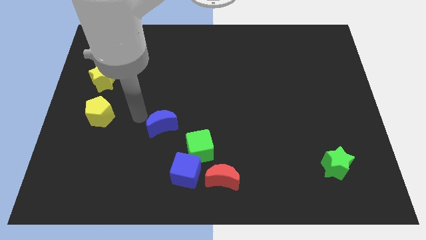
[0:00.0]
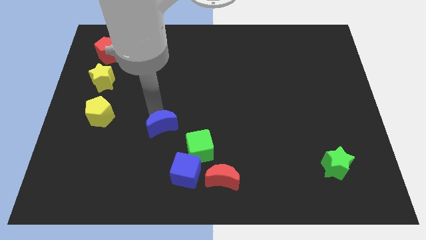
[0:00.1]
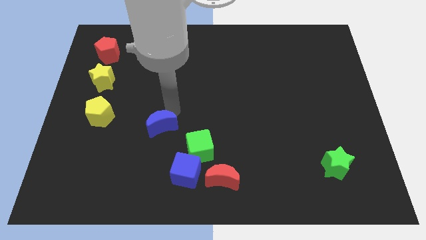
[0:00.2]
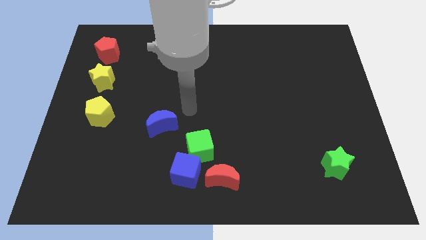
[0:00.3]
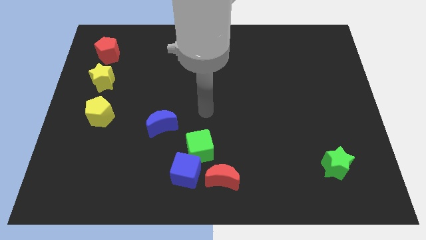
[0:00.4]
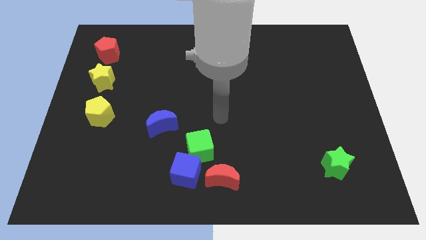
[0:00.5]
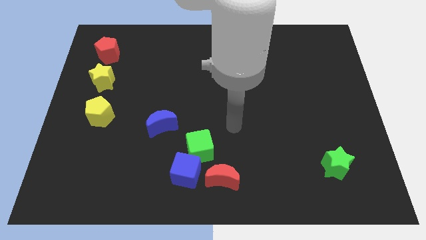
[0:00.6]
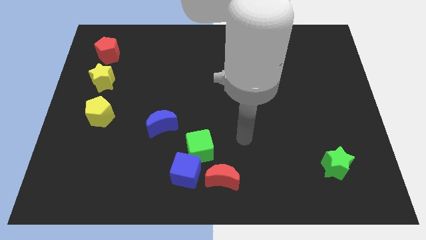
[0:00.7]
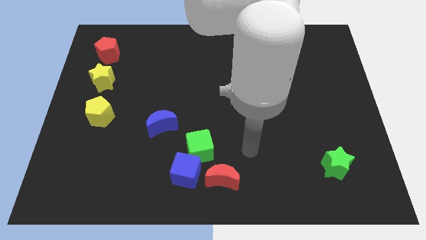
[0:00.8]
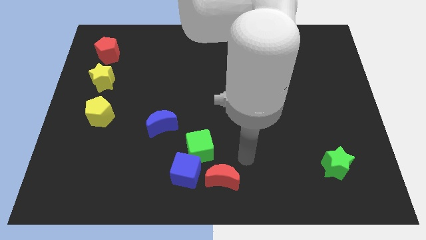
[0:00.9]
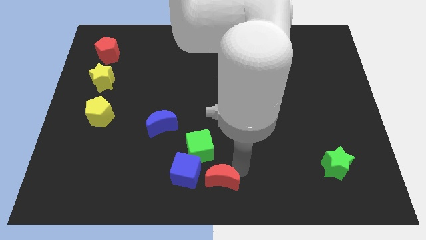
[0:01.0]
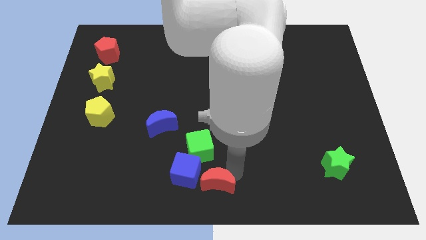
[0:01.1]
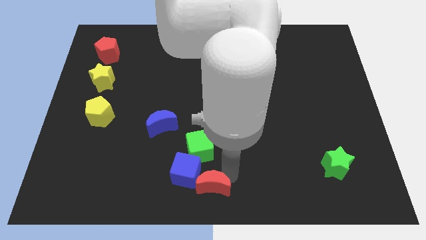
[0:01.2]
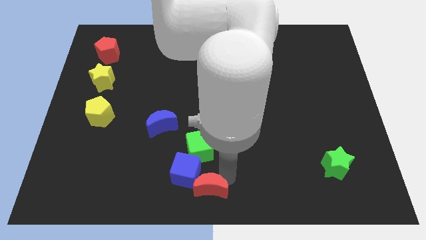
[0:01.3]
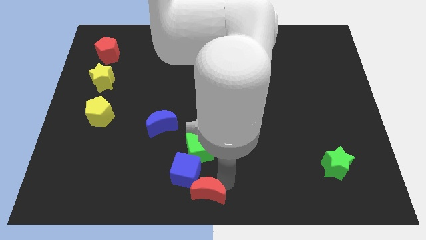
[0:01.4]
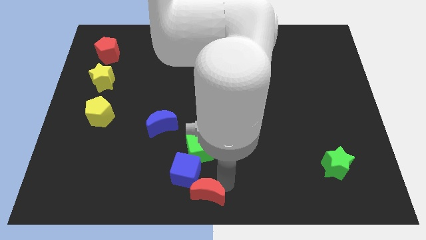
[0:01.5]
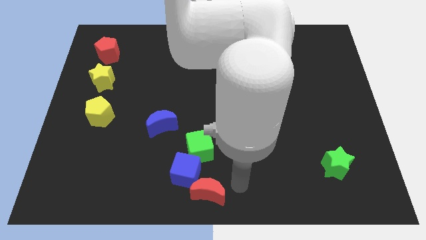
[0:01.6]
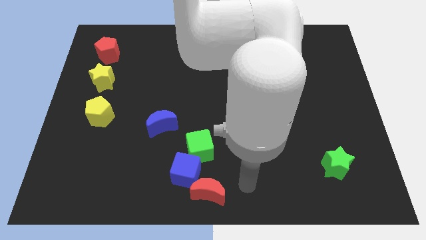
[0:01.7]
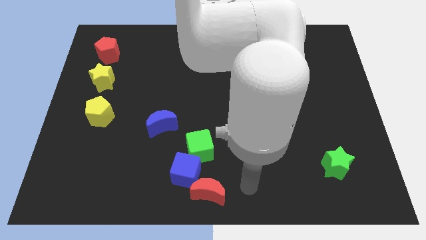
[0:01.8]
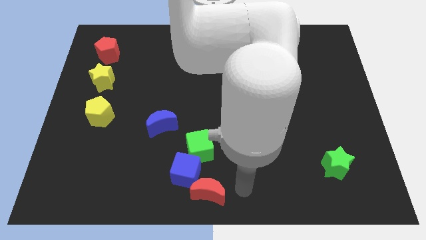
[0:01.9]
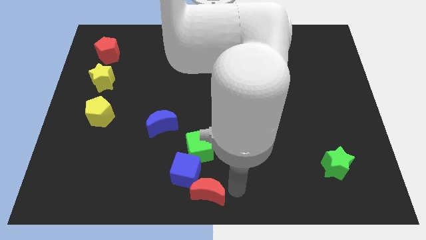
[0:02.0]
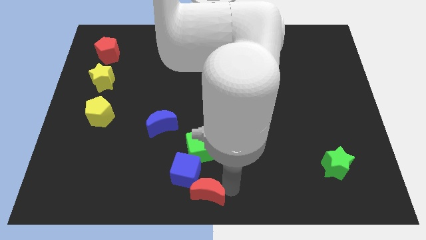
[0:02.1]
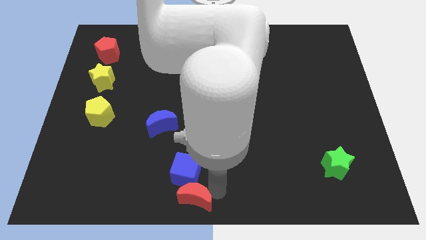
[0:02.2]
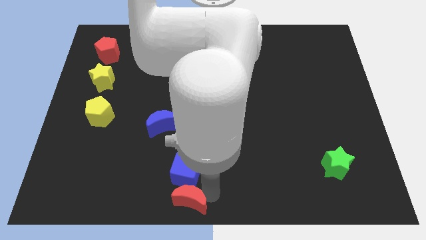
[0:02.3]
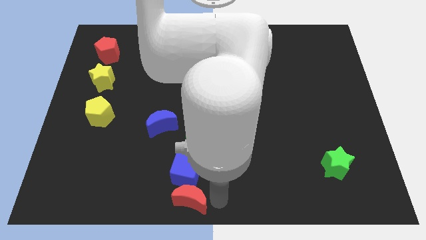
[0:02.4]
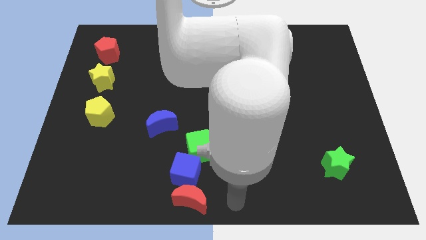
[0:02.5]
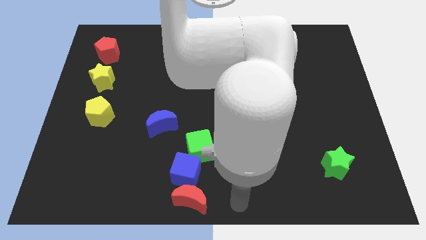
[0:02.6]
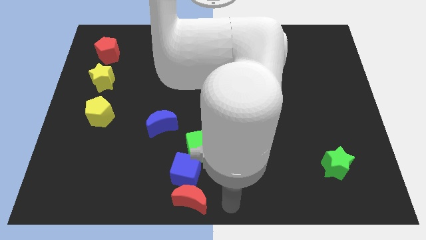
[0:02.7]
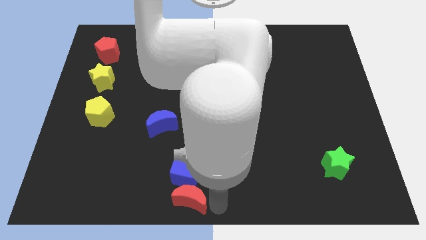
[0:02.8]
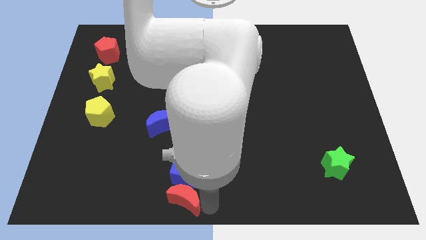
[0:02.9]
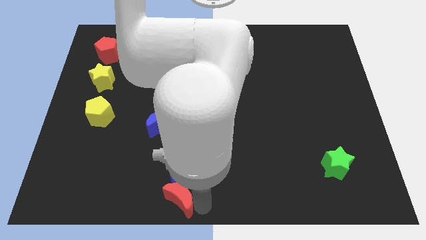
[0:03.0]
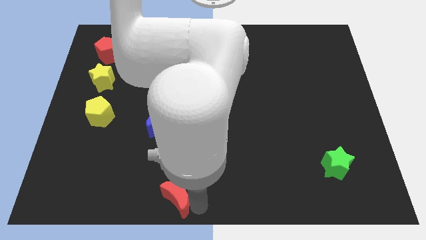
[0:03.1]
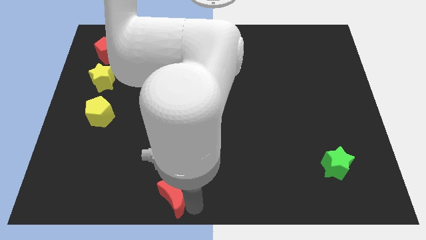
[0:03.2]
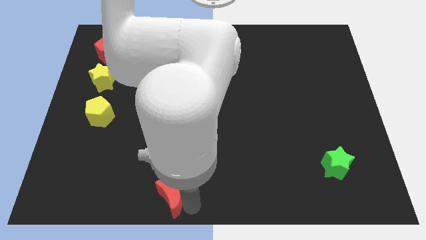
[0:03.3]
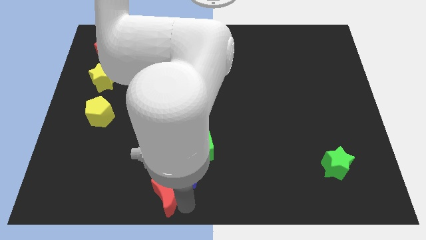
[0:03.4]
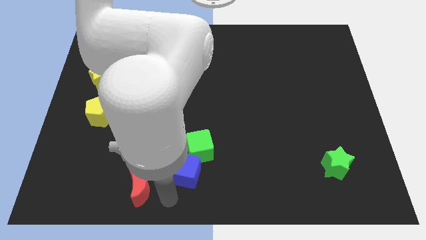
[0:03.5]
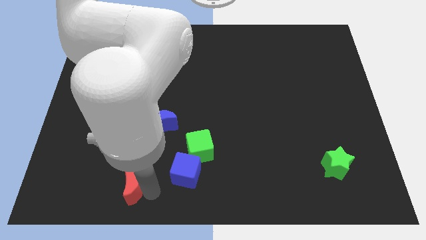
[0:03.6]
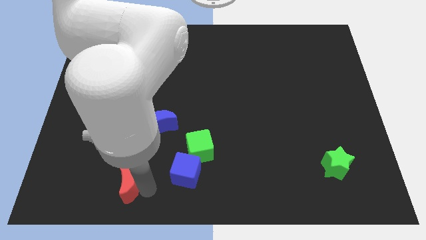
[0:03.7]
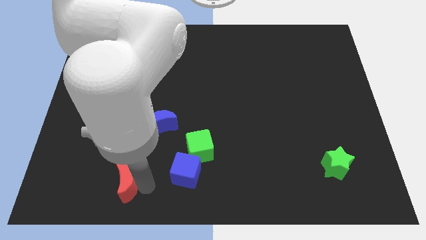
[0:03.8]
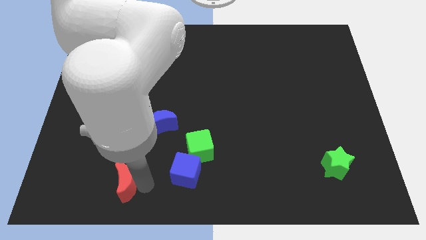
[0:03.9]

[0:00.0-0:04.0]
push red crescent towards the bottom left

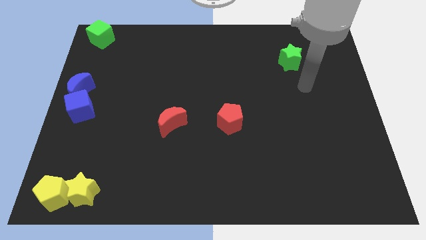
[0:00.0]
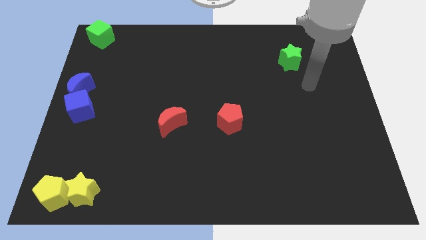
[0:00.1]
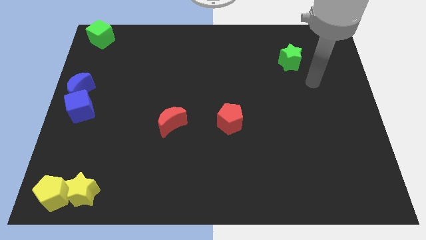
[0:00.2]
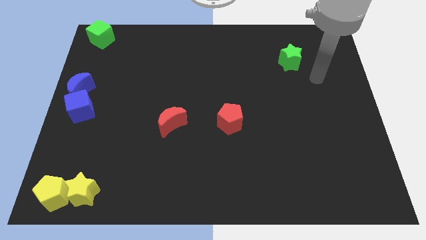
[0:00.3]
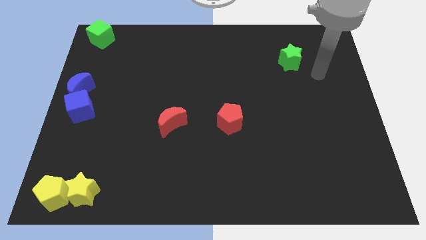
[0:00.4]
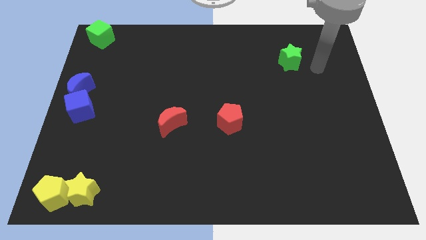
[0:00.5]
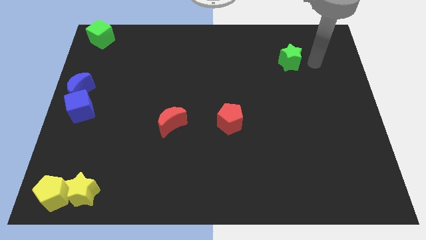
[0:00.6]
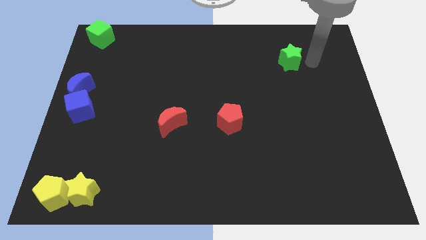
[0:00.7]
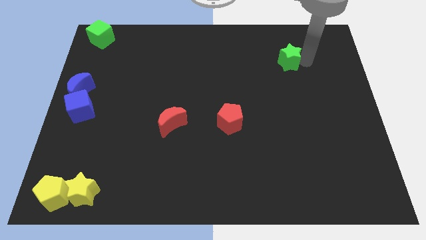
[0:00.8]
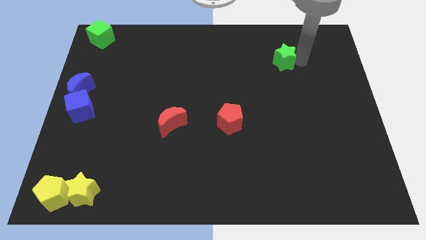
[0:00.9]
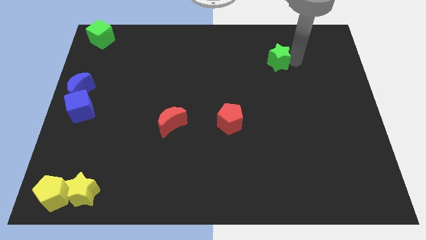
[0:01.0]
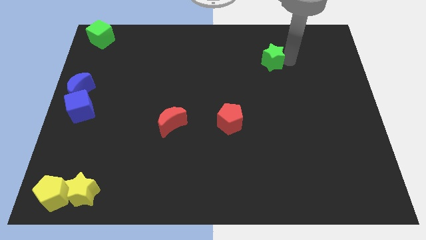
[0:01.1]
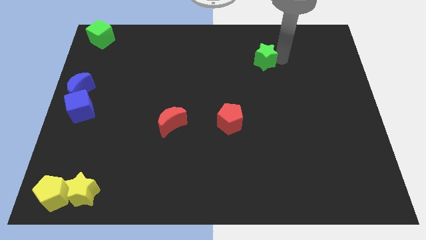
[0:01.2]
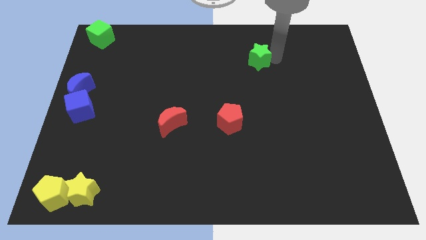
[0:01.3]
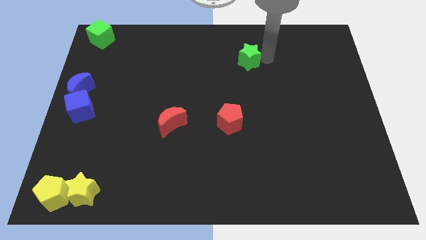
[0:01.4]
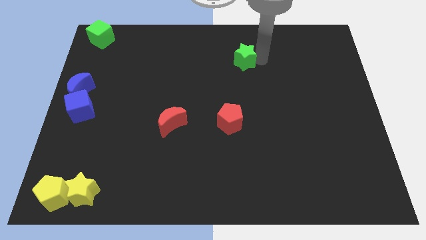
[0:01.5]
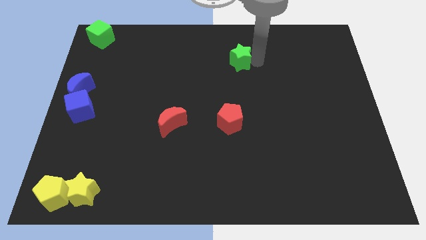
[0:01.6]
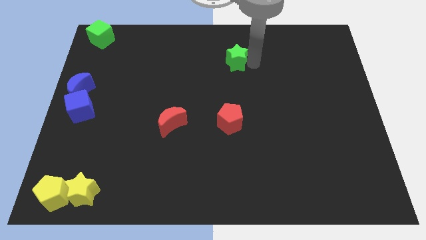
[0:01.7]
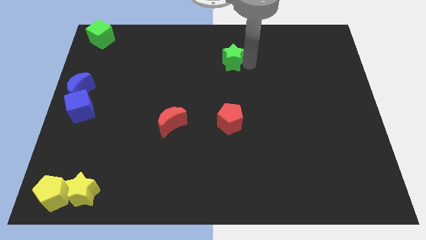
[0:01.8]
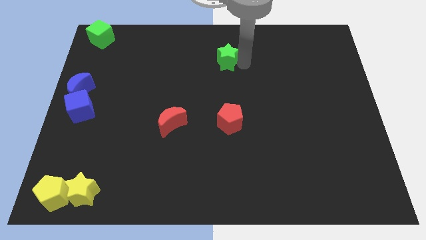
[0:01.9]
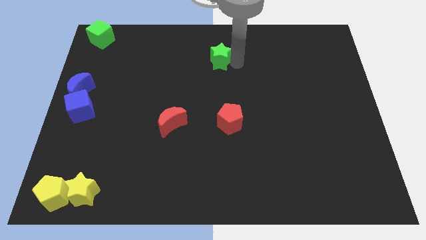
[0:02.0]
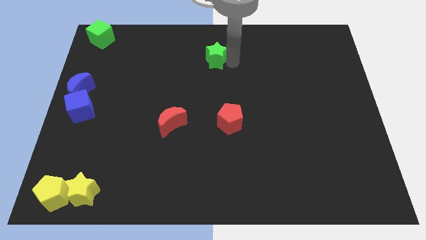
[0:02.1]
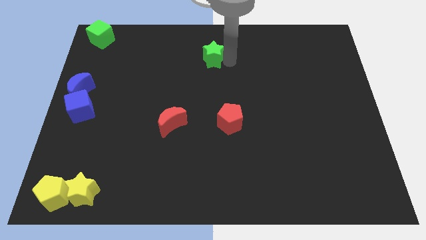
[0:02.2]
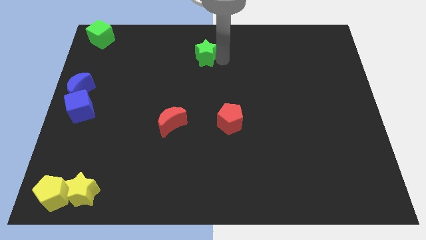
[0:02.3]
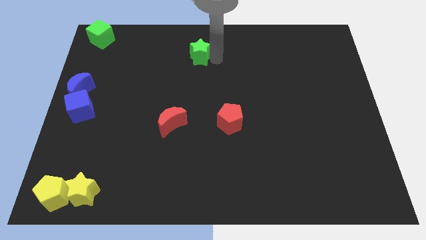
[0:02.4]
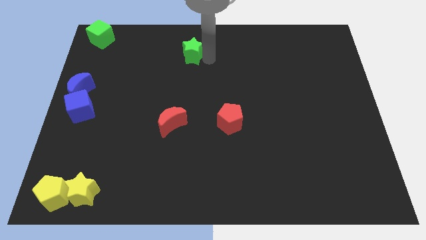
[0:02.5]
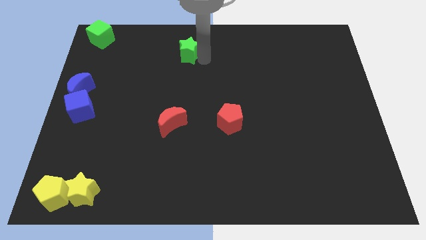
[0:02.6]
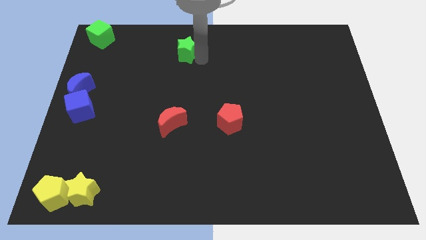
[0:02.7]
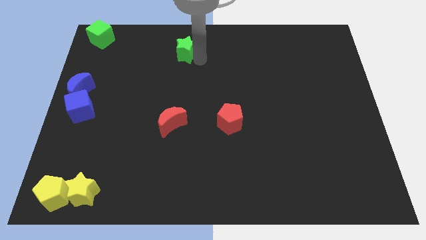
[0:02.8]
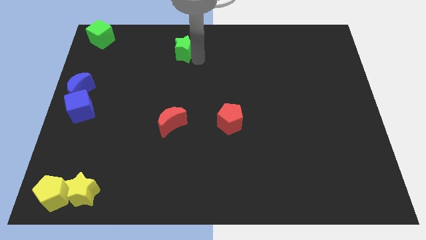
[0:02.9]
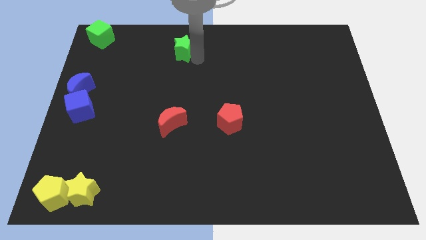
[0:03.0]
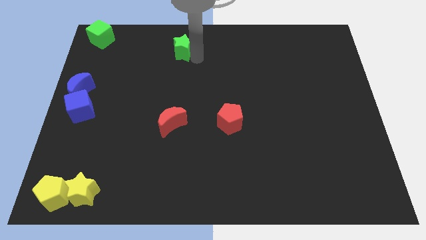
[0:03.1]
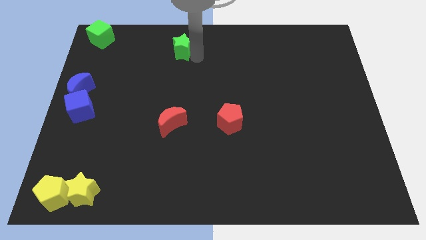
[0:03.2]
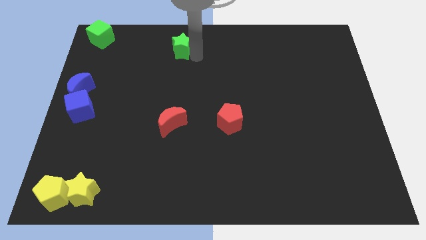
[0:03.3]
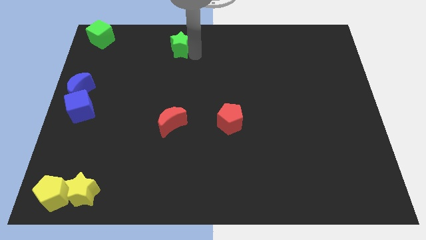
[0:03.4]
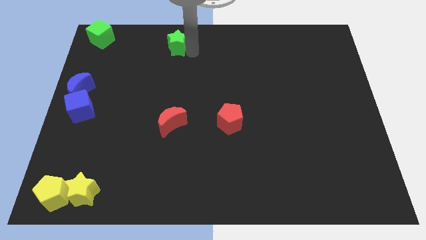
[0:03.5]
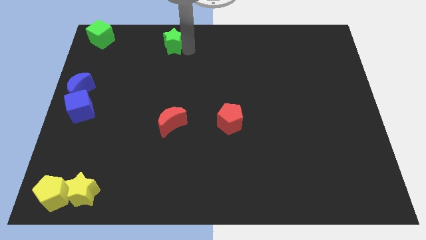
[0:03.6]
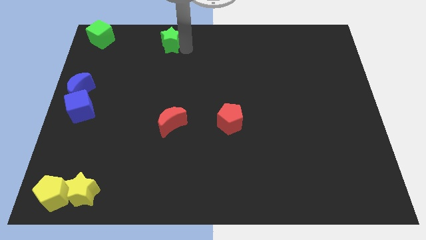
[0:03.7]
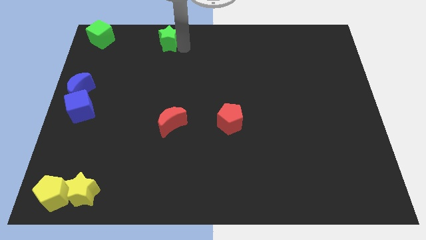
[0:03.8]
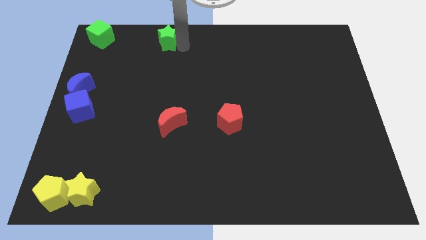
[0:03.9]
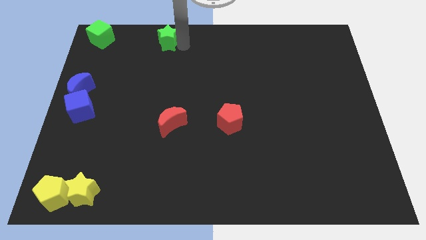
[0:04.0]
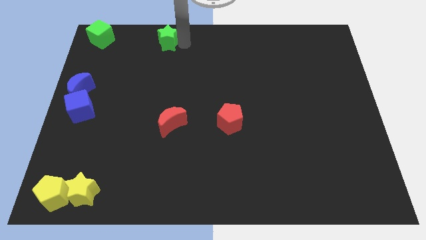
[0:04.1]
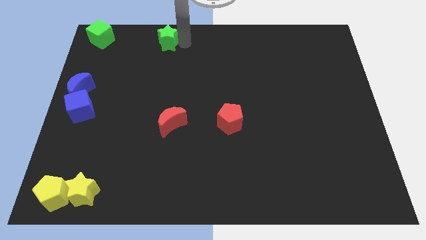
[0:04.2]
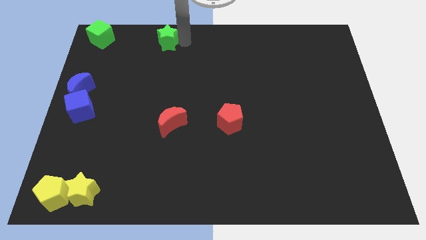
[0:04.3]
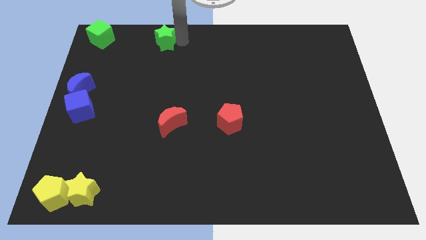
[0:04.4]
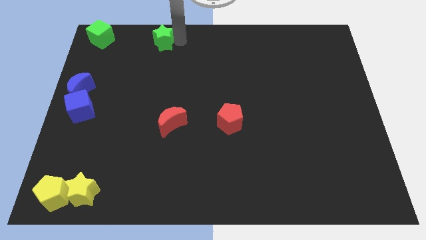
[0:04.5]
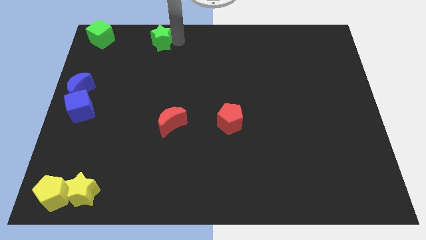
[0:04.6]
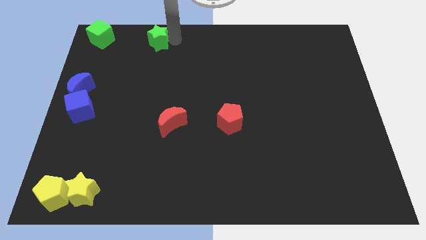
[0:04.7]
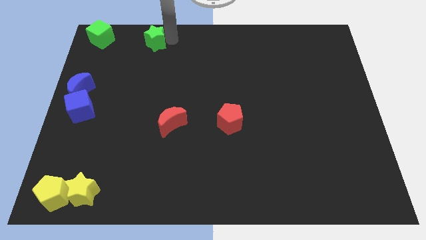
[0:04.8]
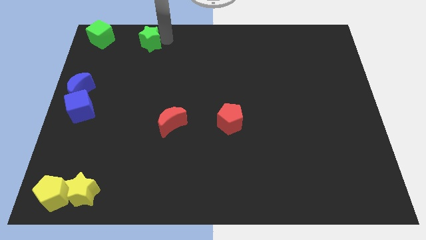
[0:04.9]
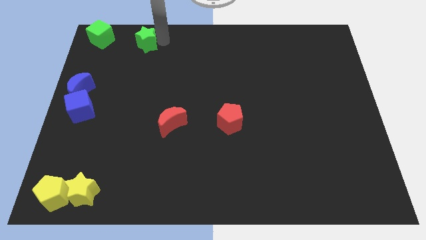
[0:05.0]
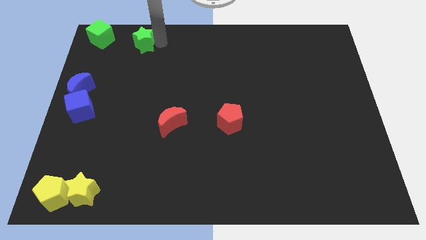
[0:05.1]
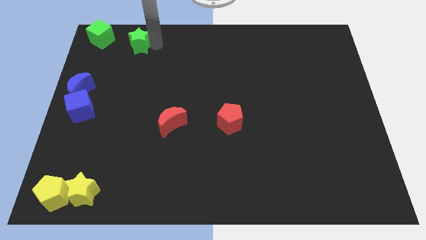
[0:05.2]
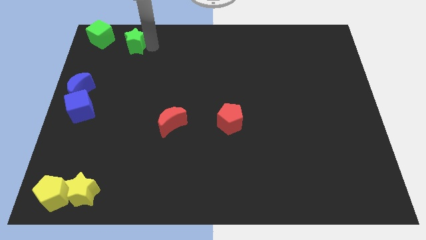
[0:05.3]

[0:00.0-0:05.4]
push the green star to the right of the green cube
